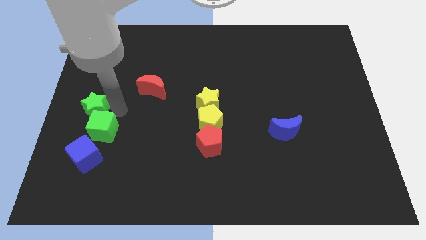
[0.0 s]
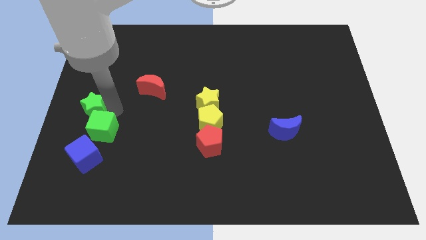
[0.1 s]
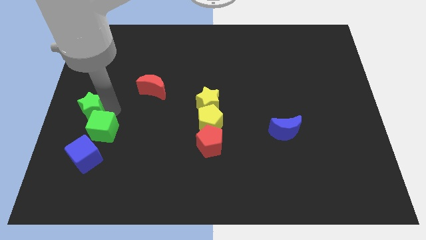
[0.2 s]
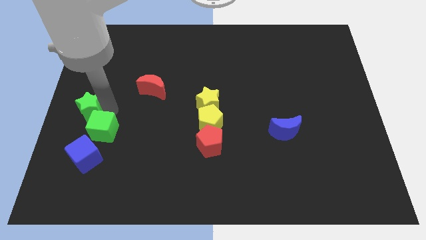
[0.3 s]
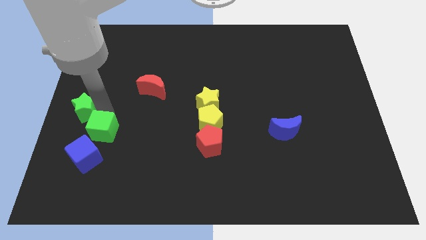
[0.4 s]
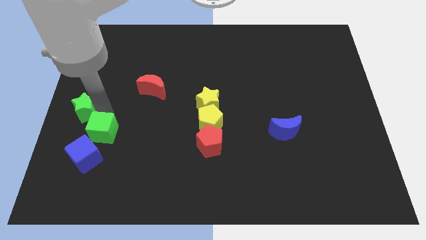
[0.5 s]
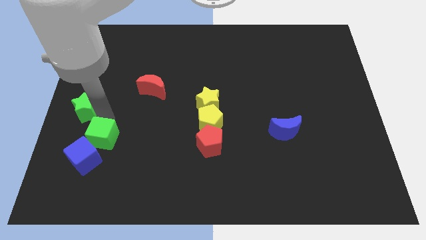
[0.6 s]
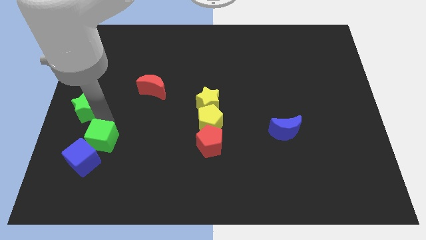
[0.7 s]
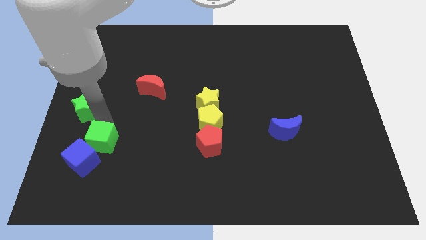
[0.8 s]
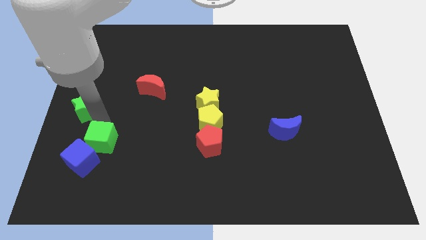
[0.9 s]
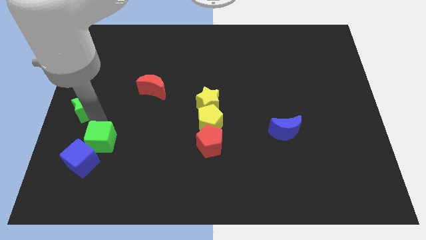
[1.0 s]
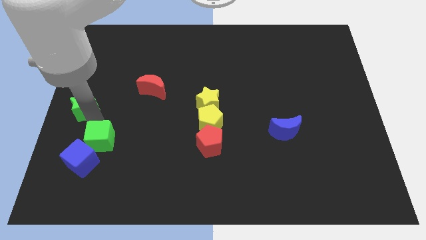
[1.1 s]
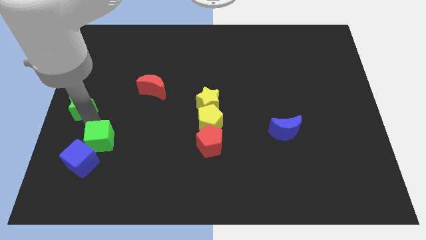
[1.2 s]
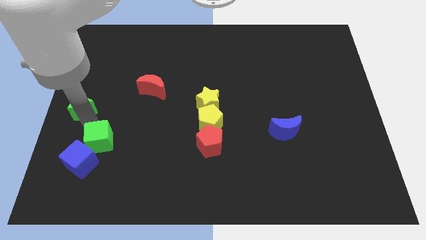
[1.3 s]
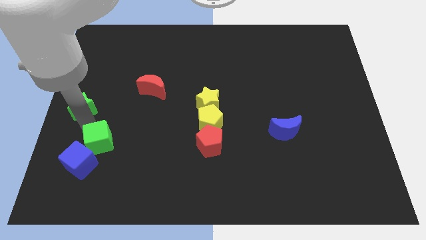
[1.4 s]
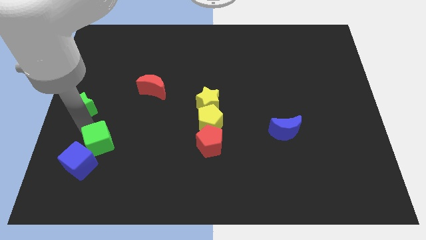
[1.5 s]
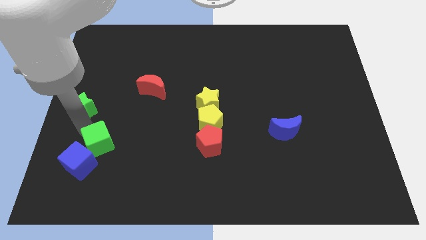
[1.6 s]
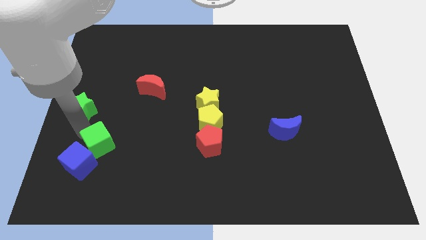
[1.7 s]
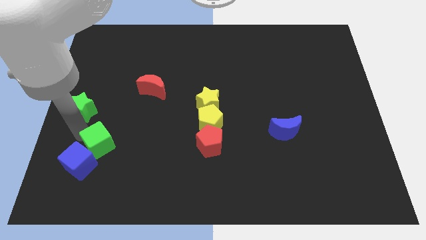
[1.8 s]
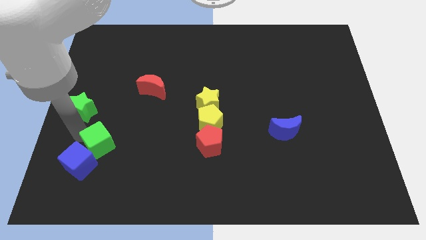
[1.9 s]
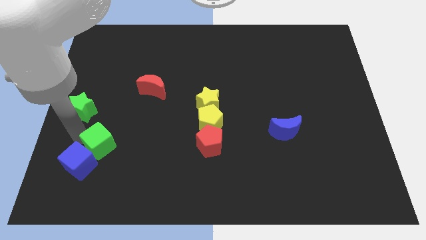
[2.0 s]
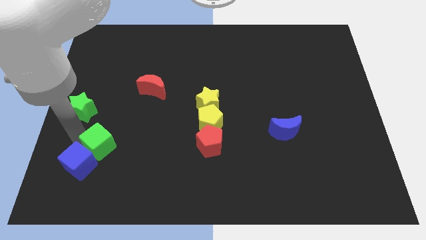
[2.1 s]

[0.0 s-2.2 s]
push green cube into blue cube

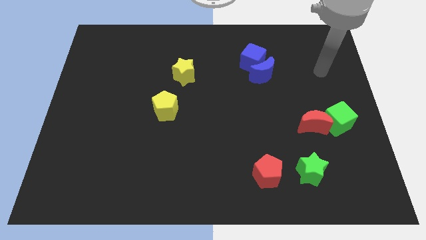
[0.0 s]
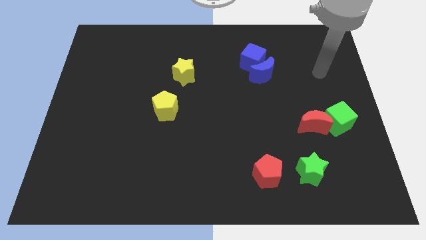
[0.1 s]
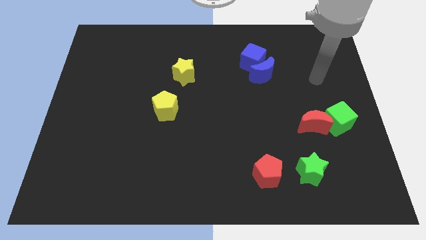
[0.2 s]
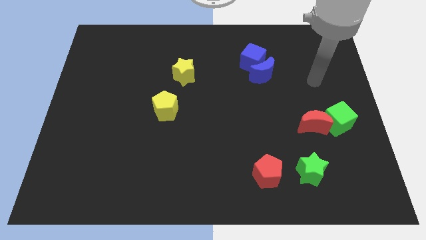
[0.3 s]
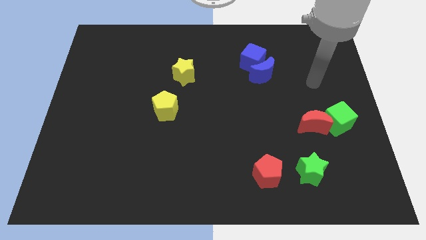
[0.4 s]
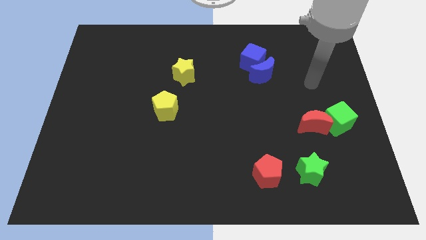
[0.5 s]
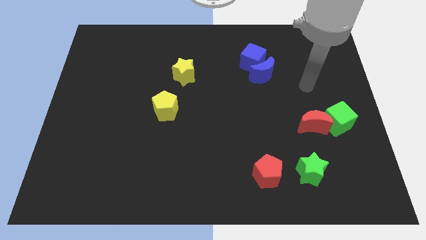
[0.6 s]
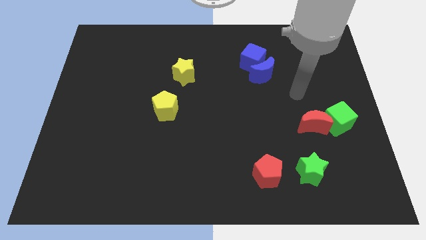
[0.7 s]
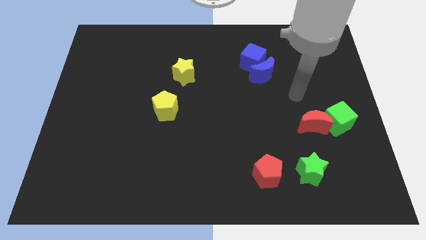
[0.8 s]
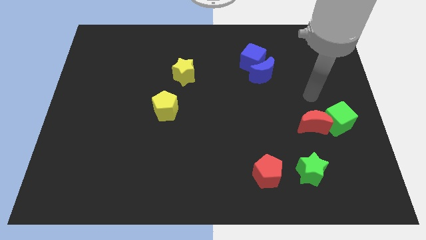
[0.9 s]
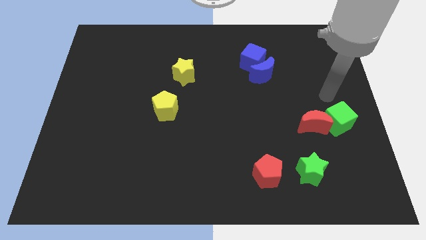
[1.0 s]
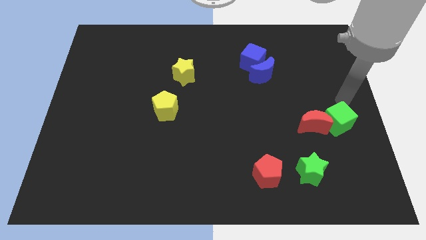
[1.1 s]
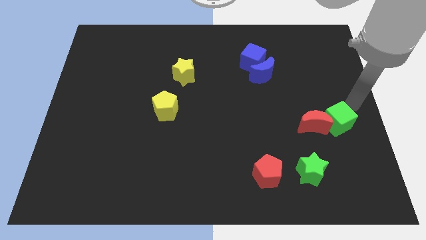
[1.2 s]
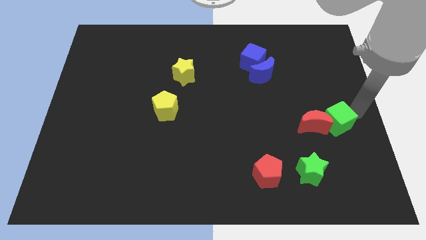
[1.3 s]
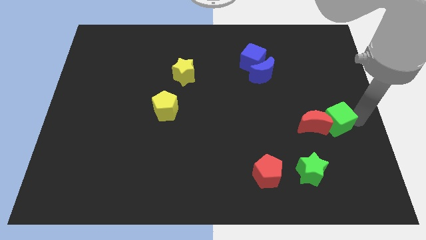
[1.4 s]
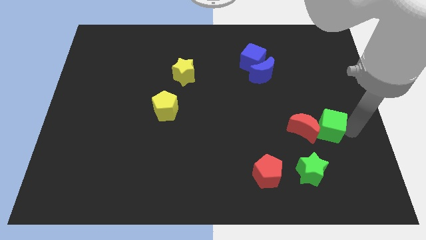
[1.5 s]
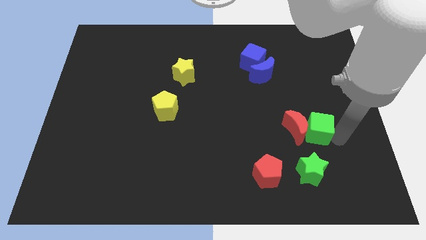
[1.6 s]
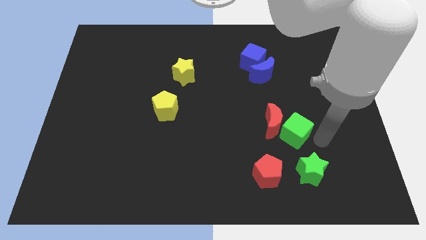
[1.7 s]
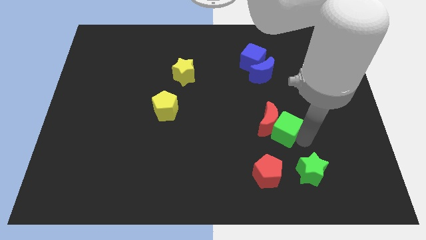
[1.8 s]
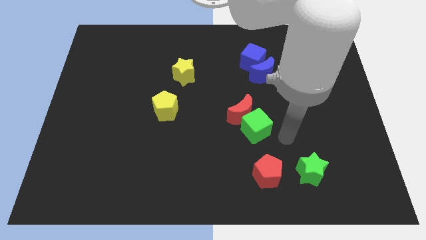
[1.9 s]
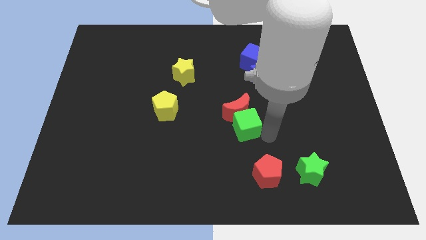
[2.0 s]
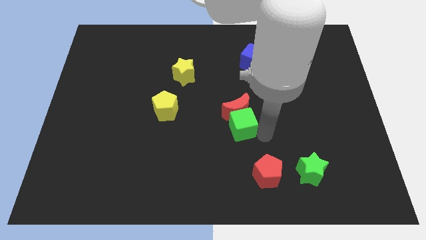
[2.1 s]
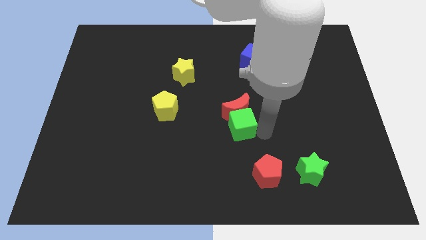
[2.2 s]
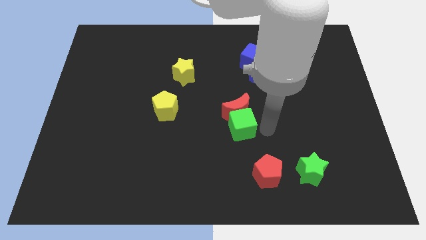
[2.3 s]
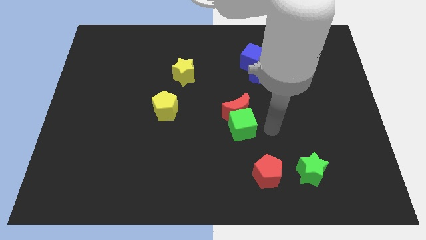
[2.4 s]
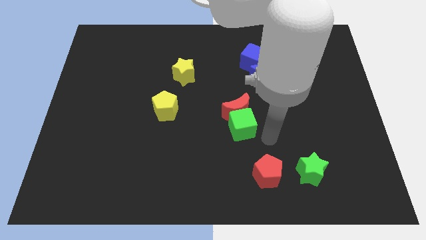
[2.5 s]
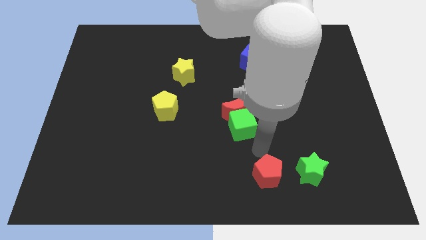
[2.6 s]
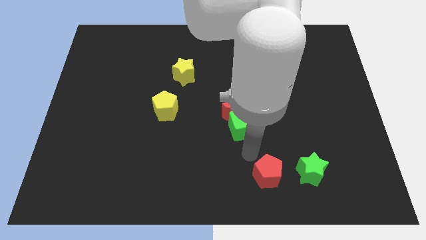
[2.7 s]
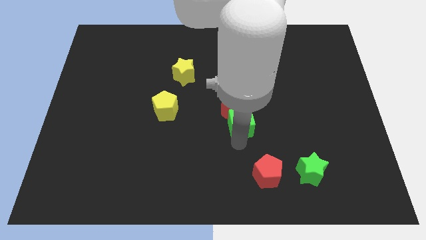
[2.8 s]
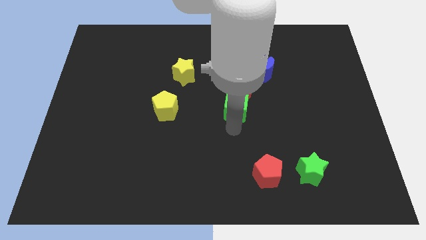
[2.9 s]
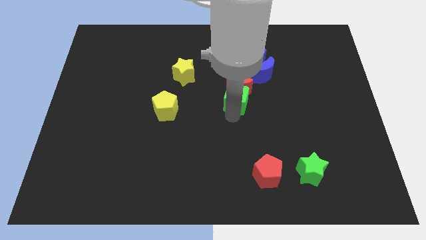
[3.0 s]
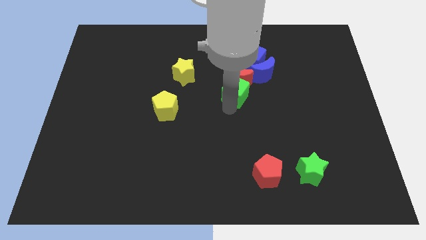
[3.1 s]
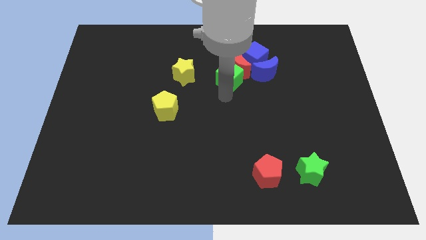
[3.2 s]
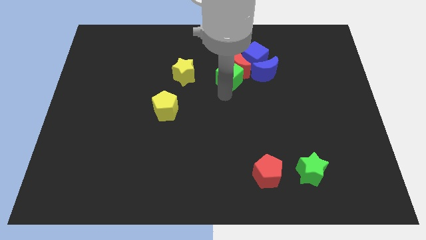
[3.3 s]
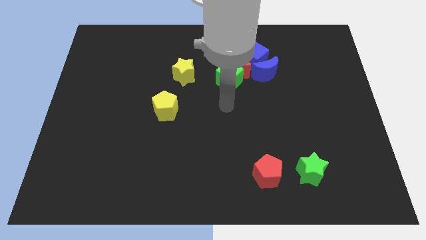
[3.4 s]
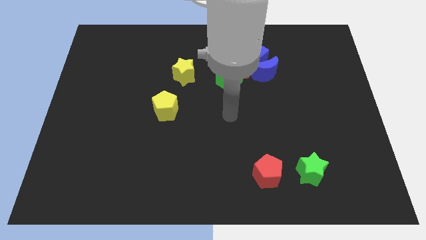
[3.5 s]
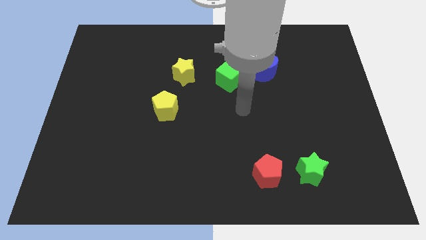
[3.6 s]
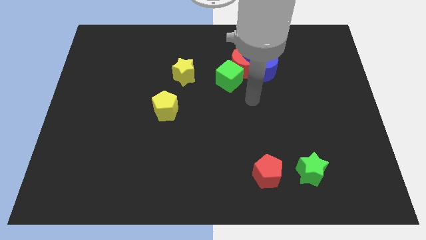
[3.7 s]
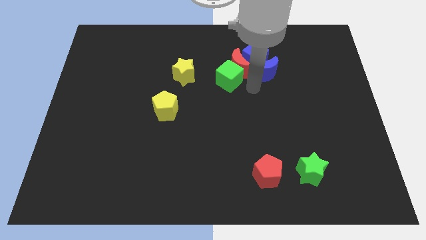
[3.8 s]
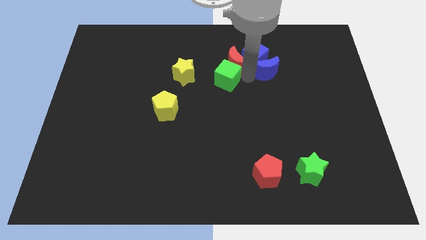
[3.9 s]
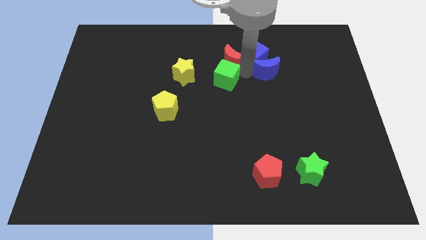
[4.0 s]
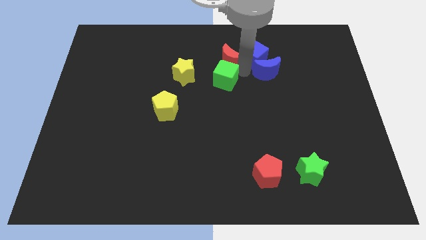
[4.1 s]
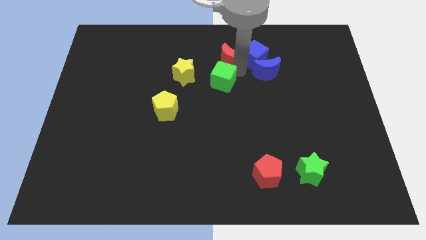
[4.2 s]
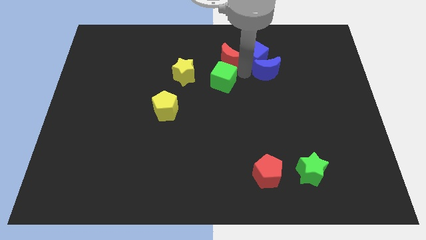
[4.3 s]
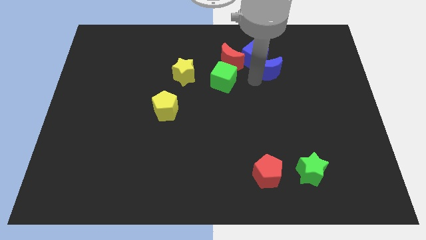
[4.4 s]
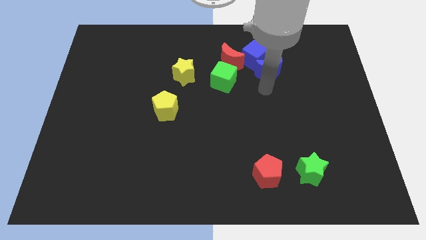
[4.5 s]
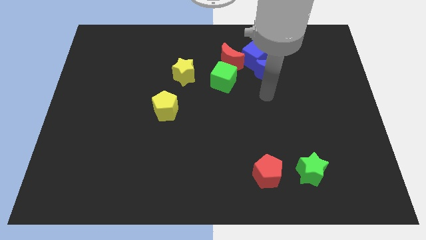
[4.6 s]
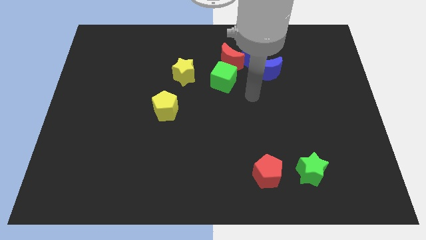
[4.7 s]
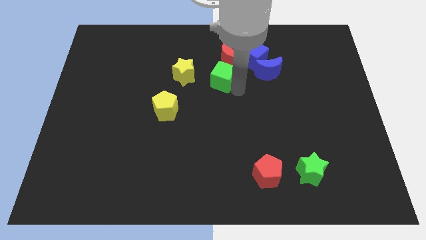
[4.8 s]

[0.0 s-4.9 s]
push the red crescent towards blue cube with the help of green cube

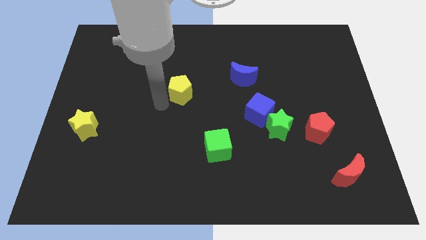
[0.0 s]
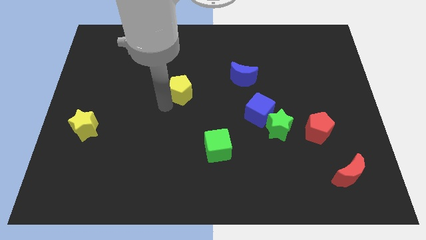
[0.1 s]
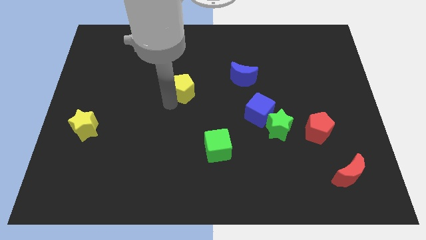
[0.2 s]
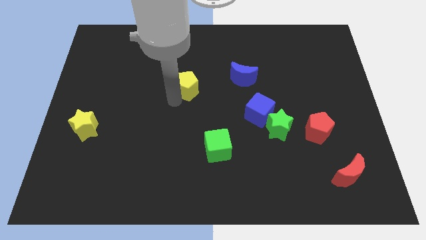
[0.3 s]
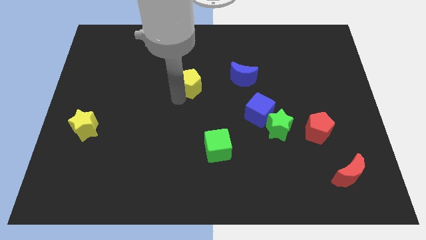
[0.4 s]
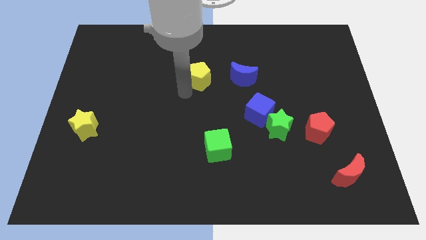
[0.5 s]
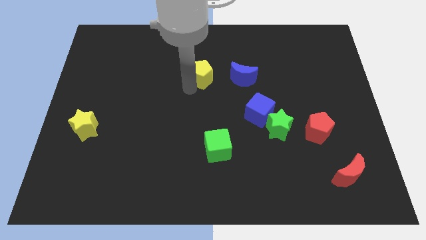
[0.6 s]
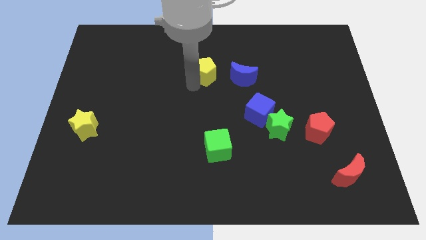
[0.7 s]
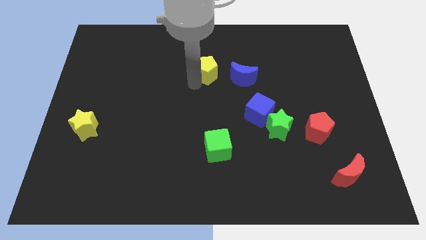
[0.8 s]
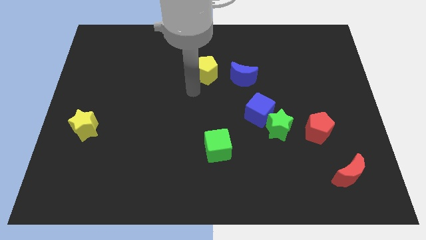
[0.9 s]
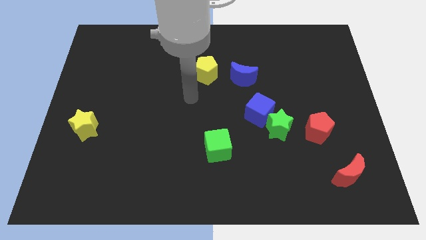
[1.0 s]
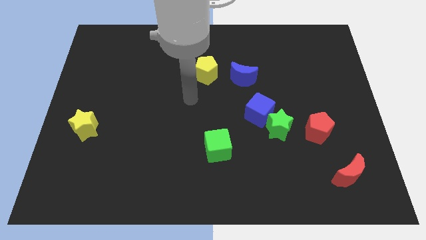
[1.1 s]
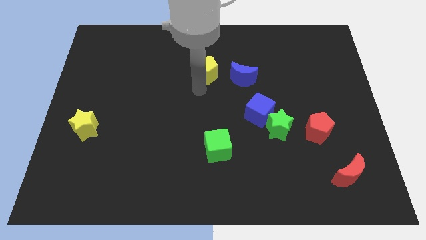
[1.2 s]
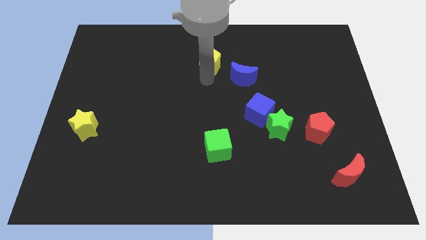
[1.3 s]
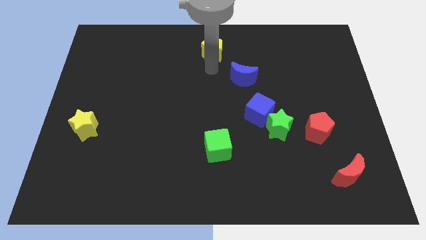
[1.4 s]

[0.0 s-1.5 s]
place the yellow pentagon diagonally top left to the blue moon
